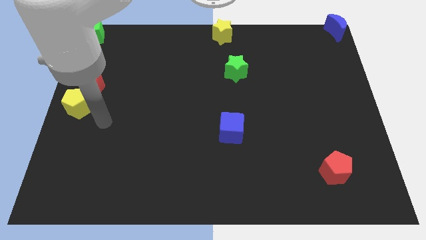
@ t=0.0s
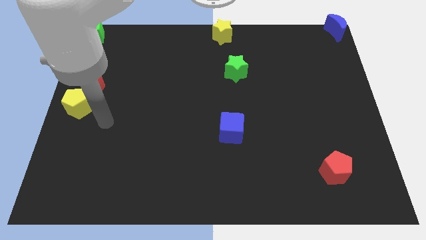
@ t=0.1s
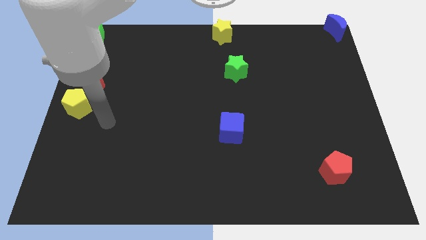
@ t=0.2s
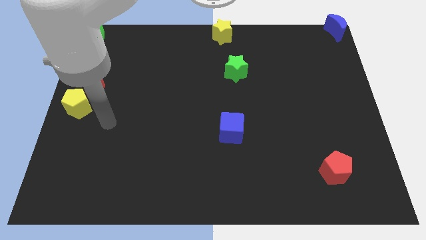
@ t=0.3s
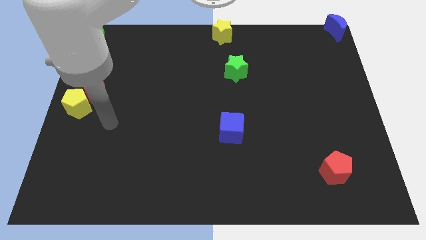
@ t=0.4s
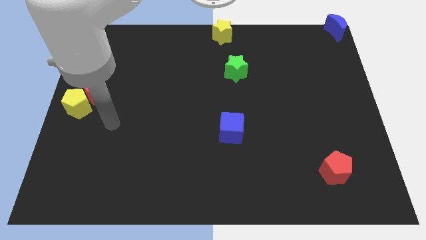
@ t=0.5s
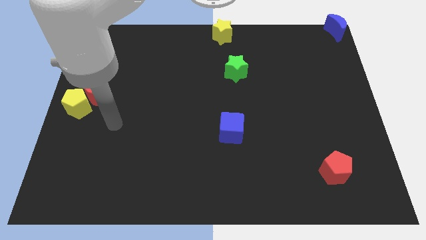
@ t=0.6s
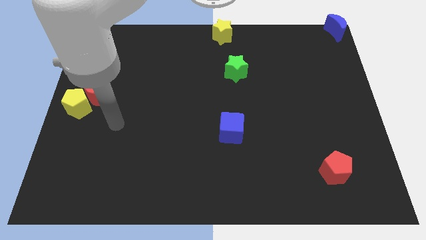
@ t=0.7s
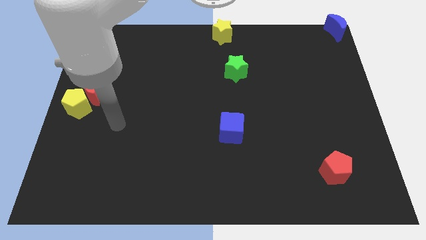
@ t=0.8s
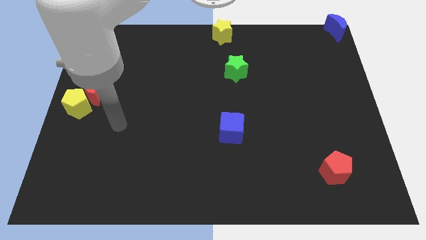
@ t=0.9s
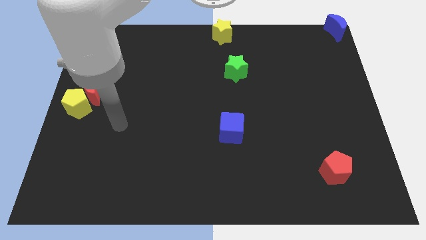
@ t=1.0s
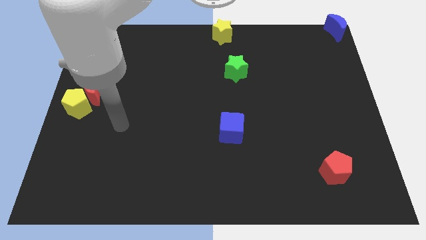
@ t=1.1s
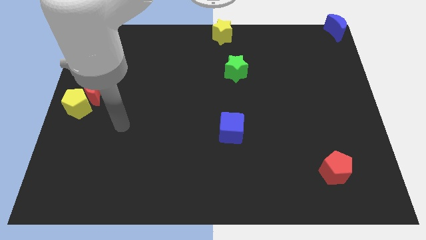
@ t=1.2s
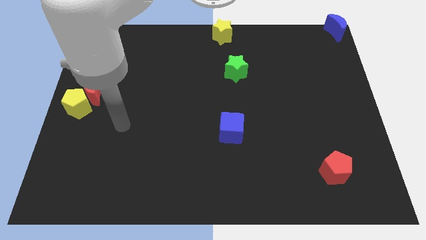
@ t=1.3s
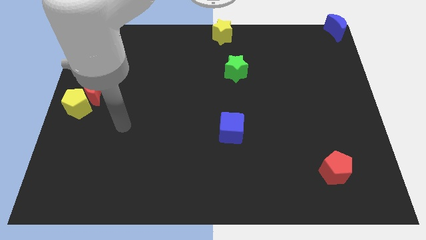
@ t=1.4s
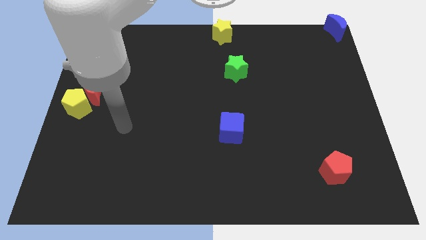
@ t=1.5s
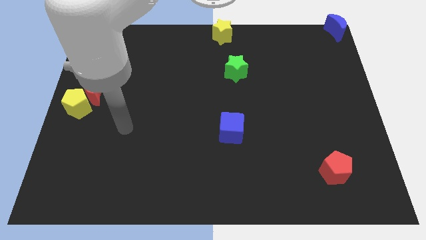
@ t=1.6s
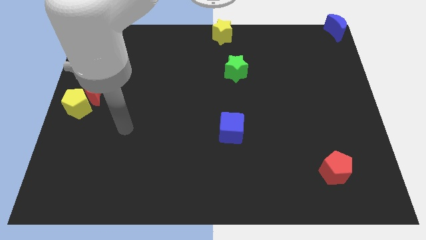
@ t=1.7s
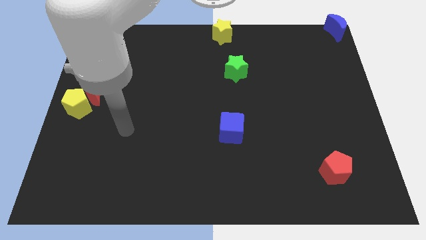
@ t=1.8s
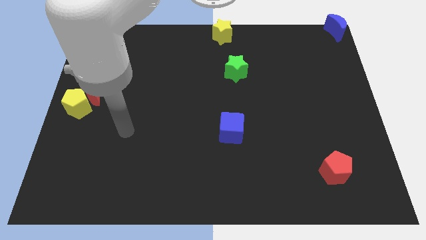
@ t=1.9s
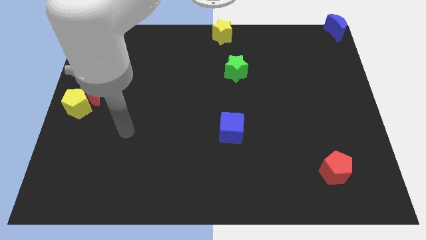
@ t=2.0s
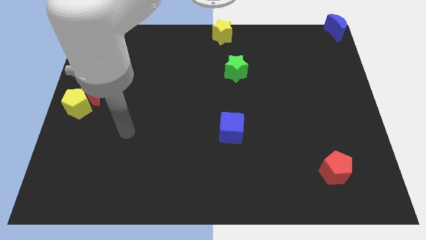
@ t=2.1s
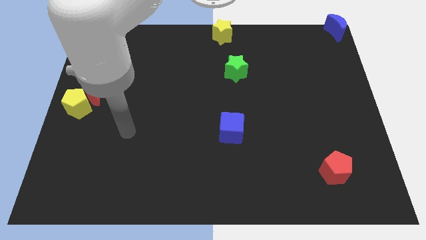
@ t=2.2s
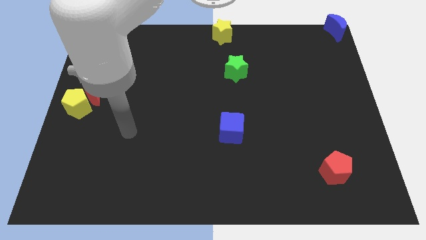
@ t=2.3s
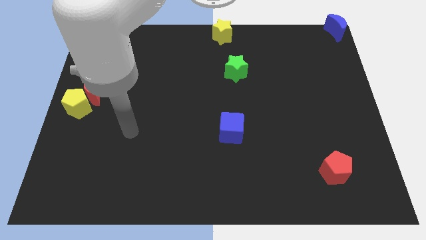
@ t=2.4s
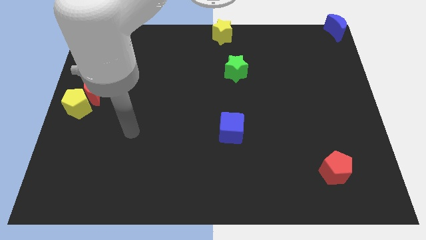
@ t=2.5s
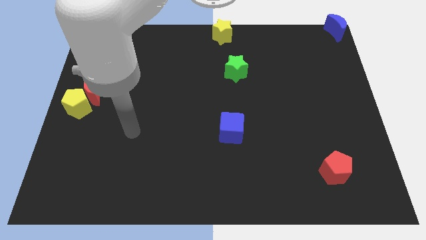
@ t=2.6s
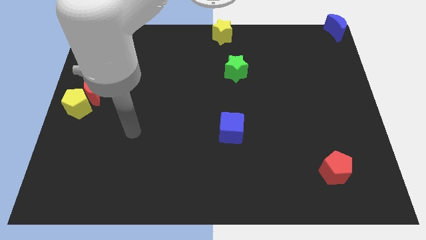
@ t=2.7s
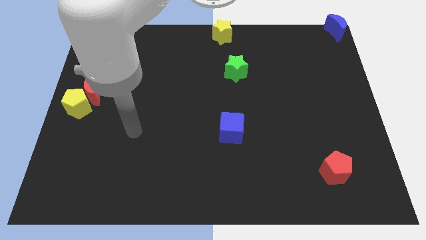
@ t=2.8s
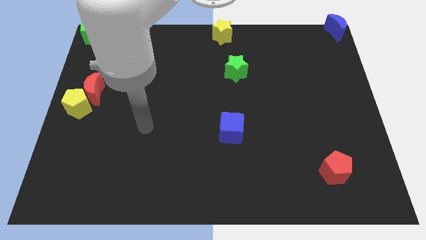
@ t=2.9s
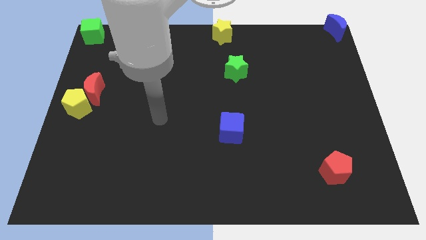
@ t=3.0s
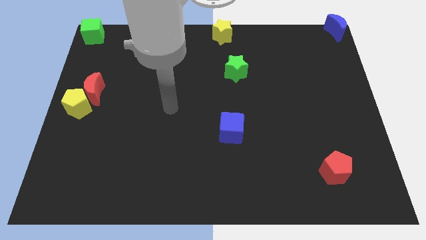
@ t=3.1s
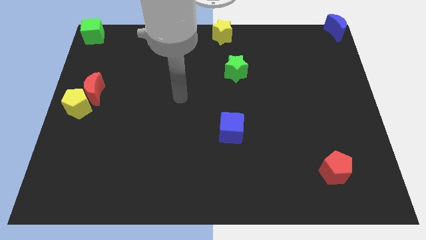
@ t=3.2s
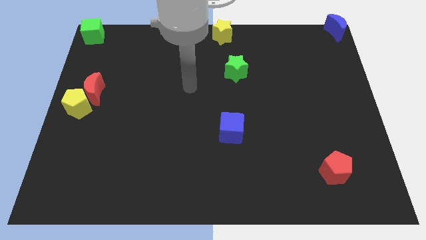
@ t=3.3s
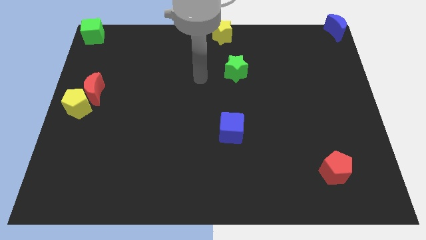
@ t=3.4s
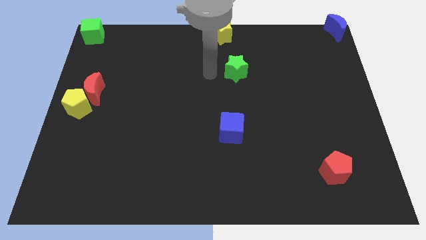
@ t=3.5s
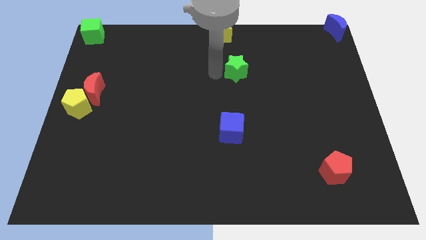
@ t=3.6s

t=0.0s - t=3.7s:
go away from the yellow pentagon

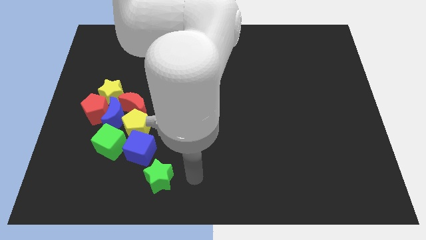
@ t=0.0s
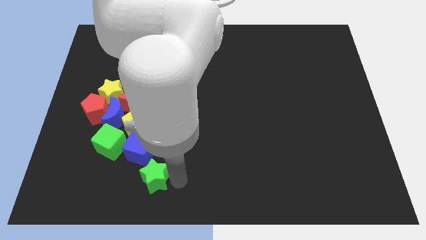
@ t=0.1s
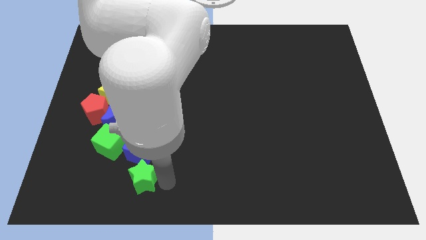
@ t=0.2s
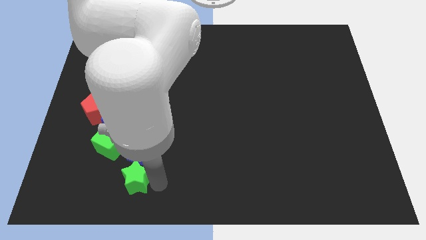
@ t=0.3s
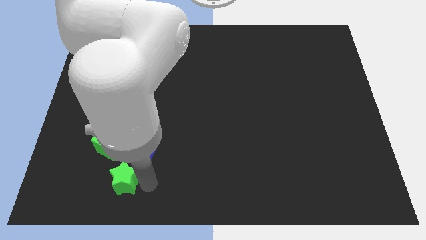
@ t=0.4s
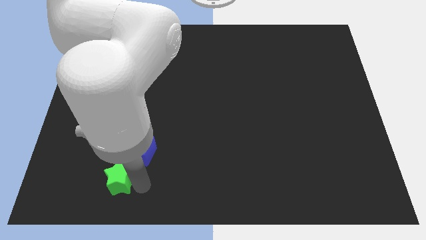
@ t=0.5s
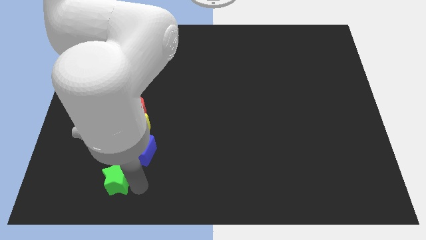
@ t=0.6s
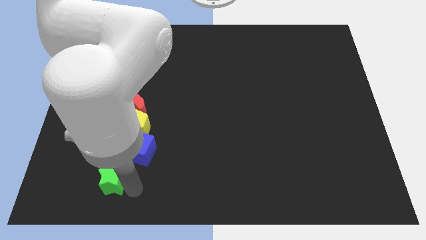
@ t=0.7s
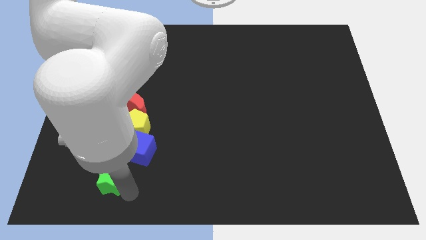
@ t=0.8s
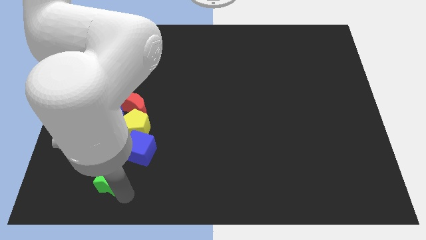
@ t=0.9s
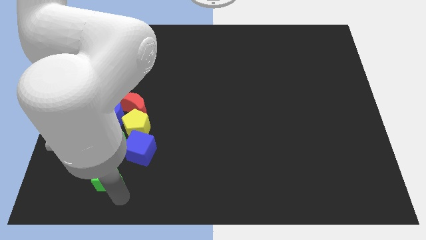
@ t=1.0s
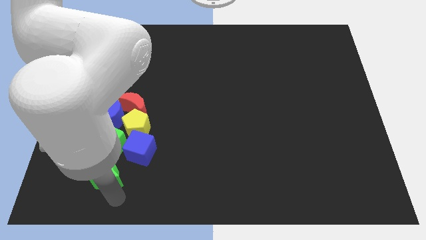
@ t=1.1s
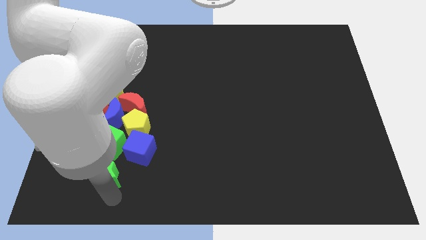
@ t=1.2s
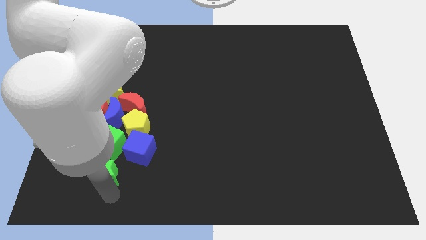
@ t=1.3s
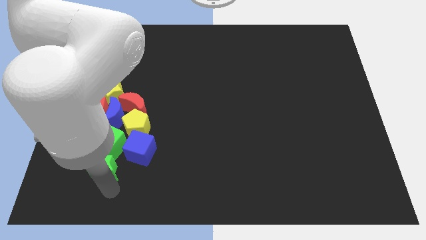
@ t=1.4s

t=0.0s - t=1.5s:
place the green star under the green cube

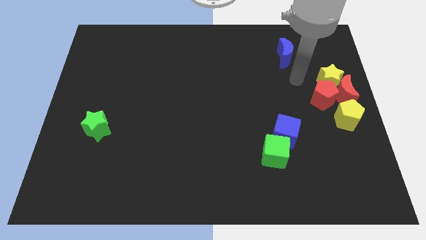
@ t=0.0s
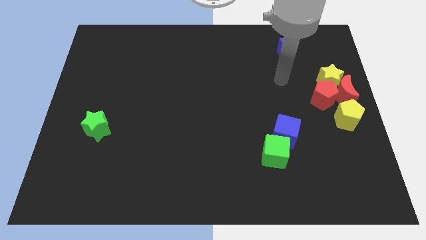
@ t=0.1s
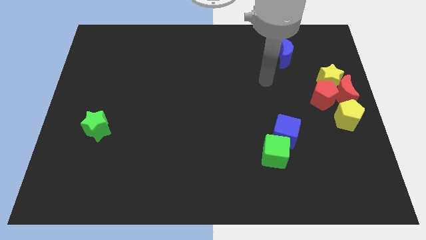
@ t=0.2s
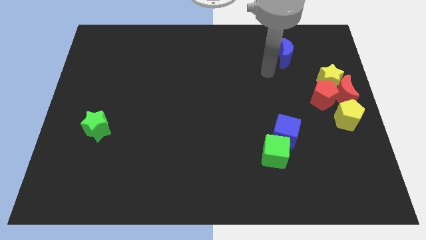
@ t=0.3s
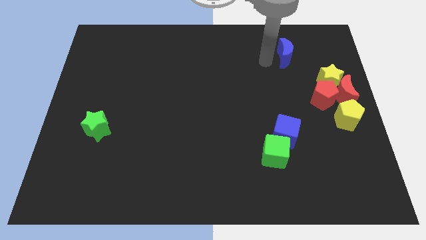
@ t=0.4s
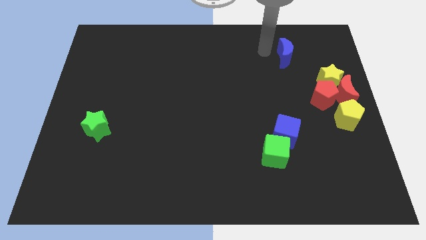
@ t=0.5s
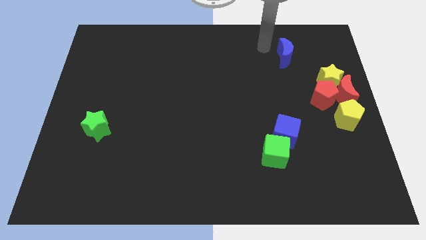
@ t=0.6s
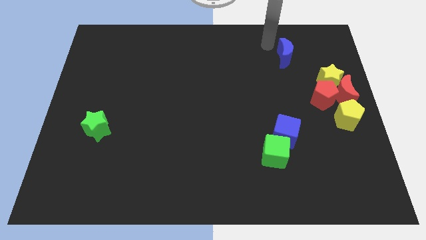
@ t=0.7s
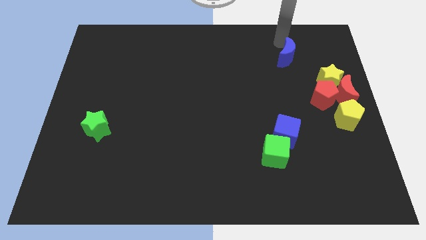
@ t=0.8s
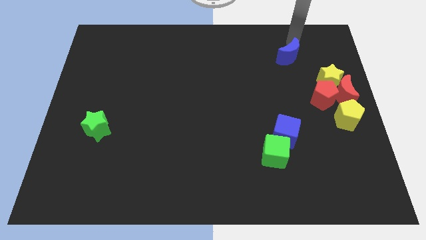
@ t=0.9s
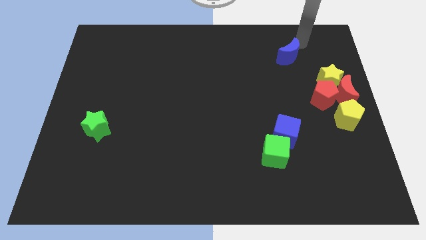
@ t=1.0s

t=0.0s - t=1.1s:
slightly push the blue moon

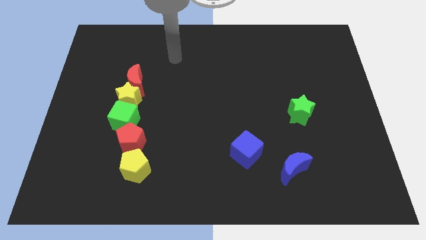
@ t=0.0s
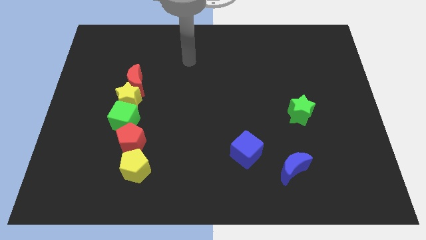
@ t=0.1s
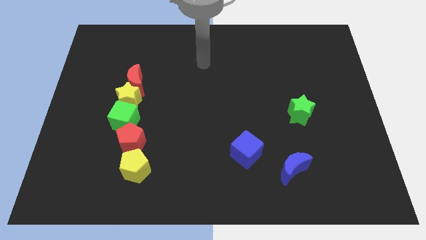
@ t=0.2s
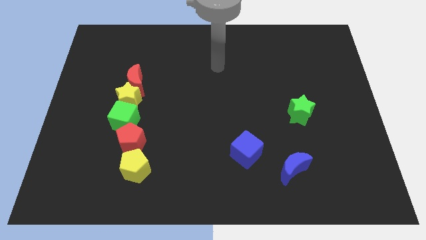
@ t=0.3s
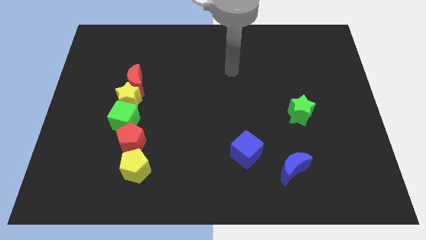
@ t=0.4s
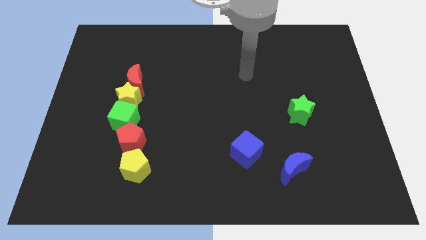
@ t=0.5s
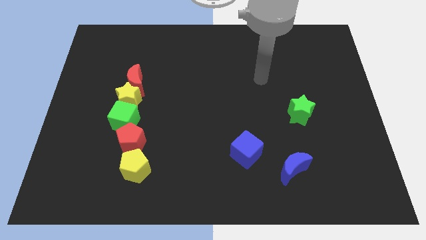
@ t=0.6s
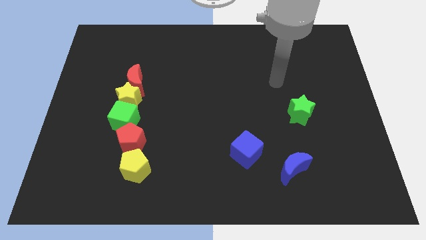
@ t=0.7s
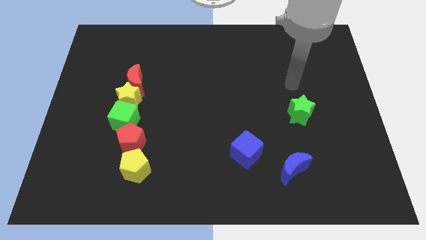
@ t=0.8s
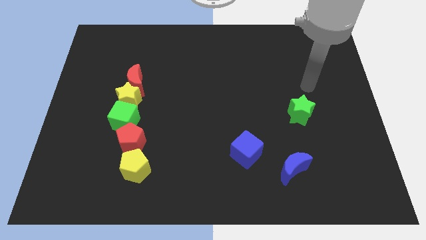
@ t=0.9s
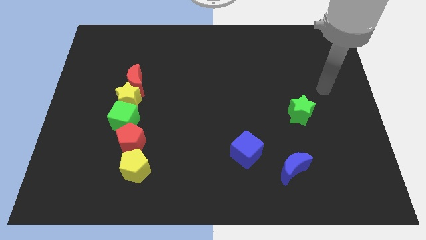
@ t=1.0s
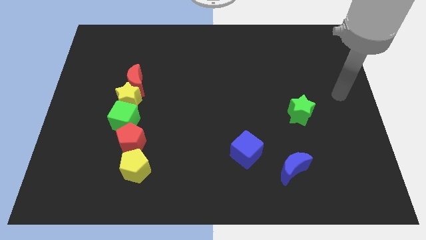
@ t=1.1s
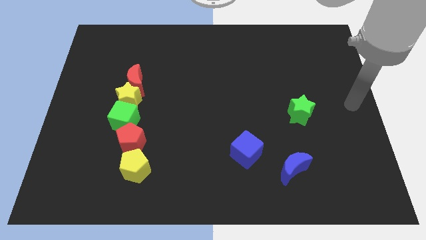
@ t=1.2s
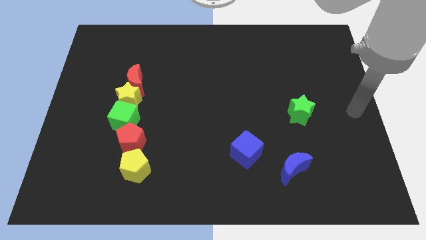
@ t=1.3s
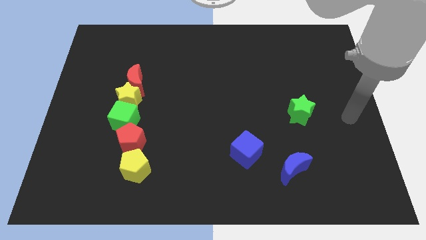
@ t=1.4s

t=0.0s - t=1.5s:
move your arm to the right side of the green star

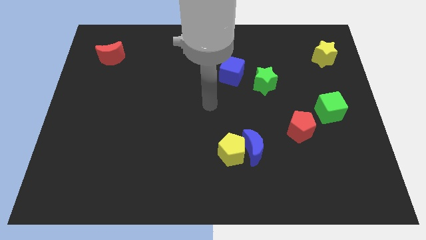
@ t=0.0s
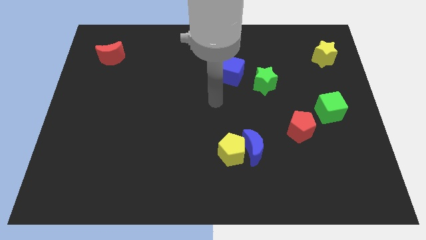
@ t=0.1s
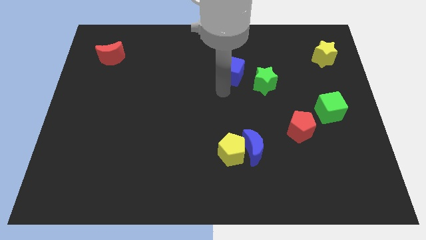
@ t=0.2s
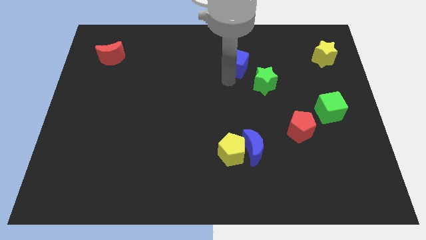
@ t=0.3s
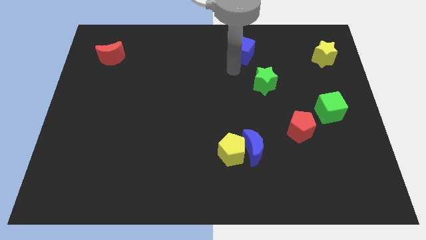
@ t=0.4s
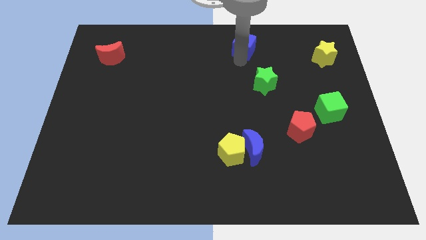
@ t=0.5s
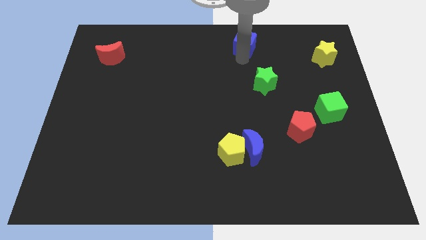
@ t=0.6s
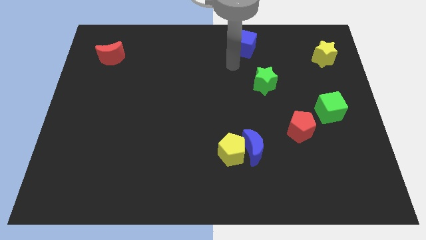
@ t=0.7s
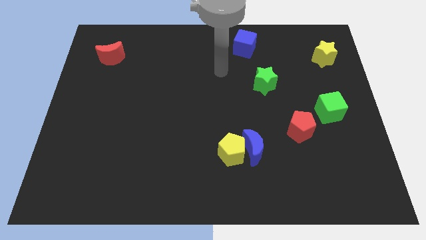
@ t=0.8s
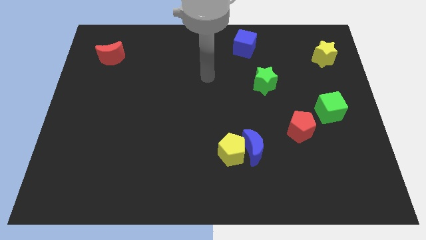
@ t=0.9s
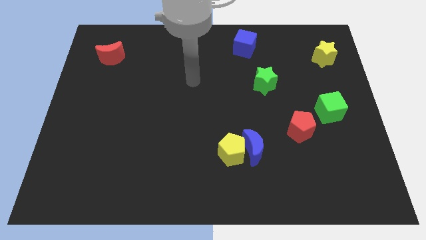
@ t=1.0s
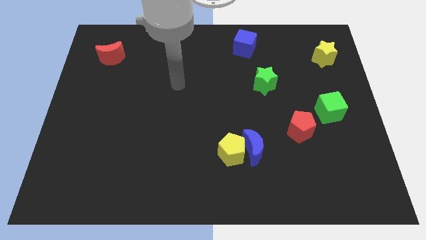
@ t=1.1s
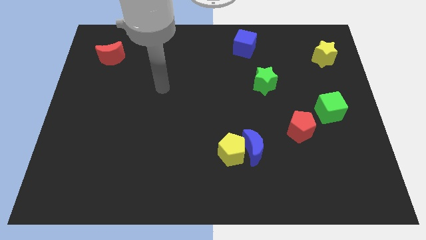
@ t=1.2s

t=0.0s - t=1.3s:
push the blue cube towards the top of the board
